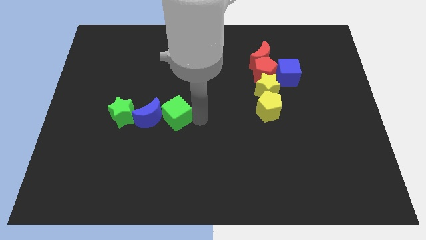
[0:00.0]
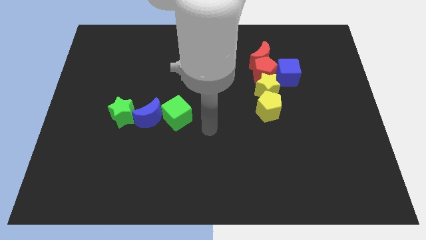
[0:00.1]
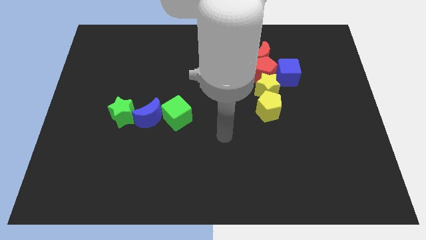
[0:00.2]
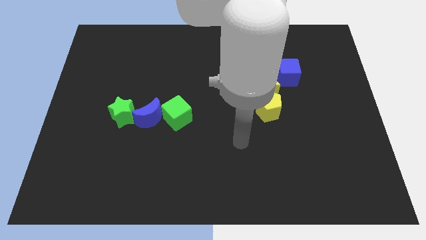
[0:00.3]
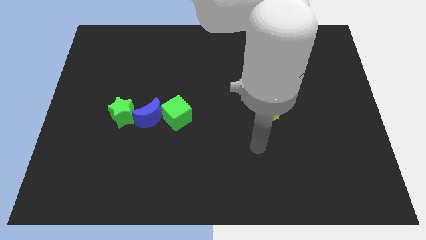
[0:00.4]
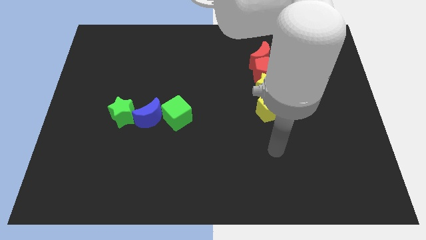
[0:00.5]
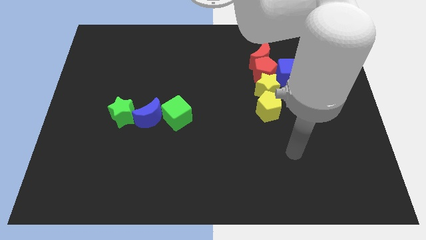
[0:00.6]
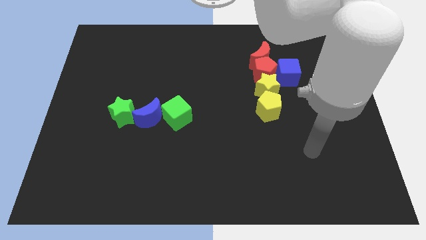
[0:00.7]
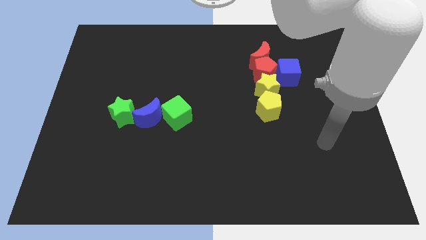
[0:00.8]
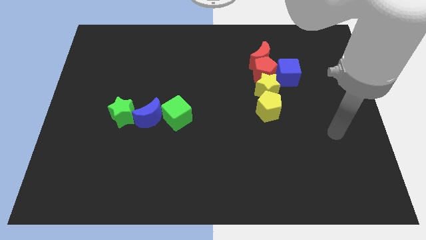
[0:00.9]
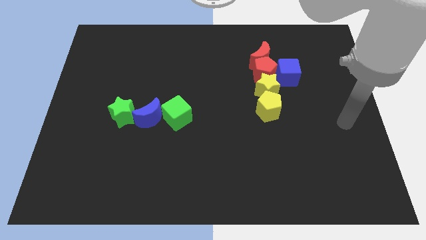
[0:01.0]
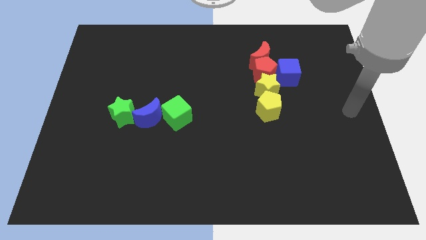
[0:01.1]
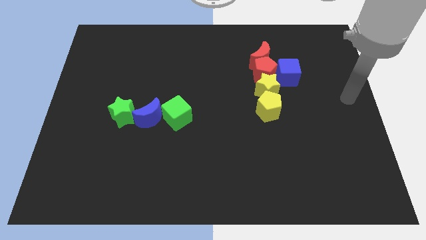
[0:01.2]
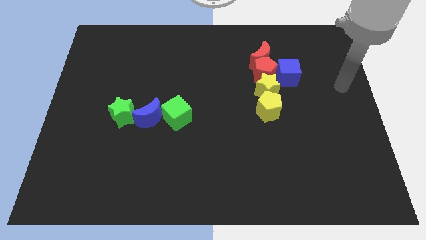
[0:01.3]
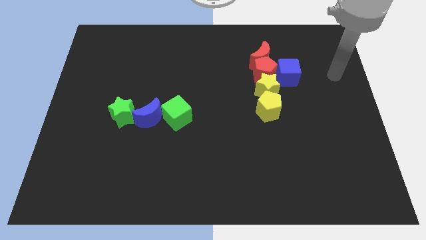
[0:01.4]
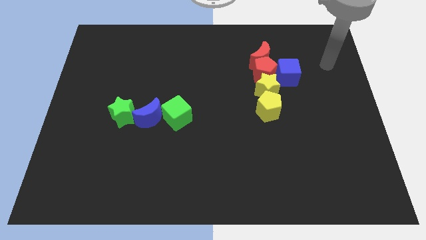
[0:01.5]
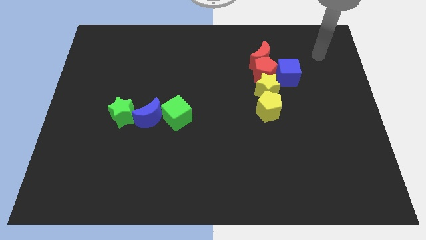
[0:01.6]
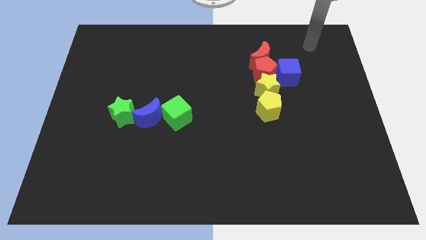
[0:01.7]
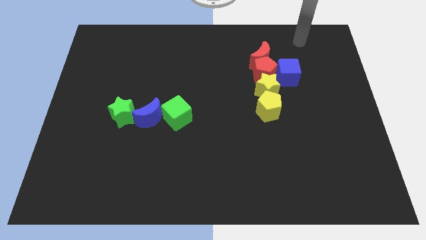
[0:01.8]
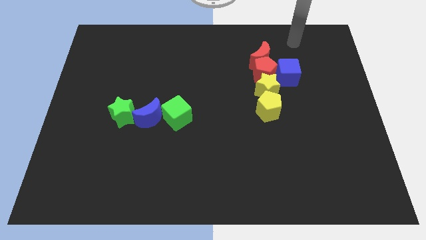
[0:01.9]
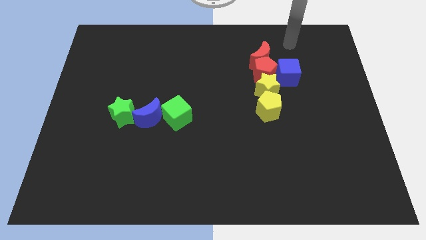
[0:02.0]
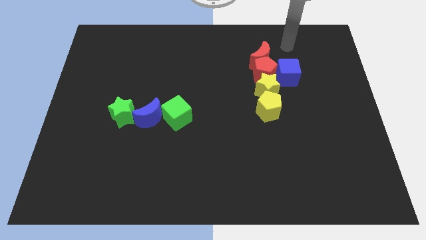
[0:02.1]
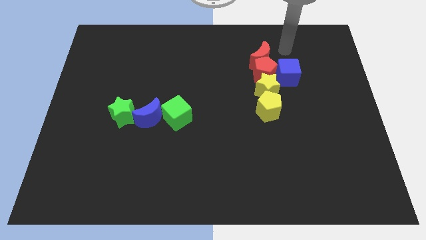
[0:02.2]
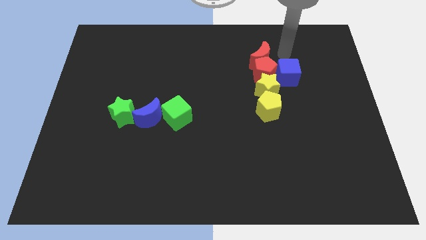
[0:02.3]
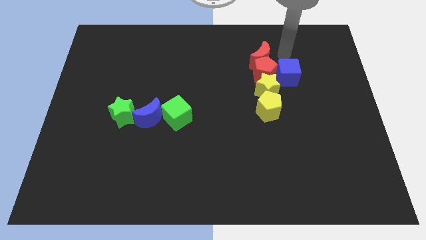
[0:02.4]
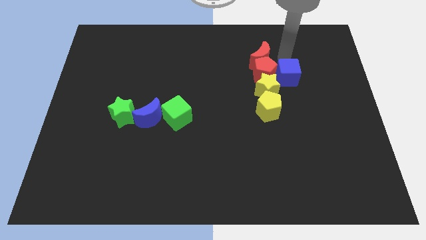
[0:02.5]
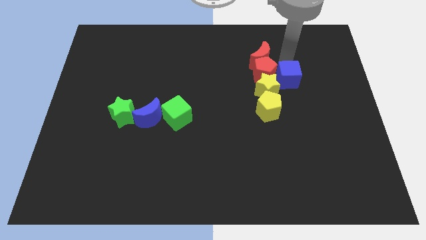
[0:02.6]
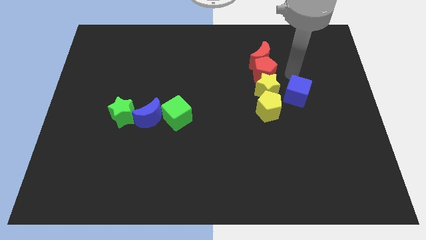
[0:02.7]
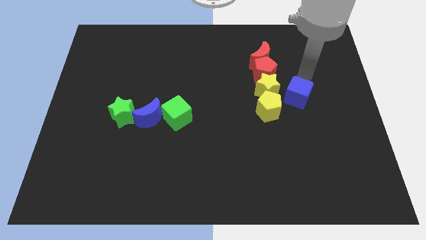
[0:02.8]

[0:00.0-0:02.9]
separate the blue cube from the red pentagon

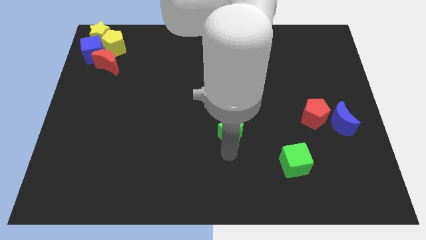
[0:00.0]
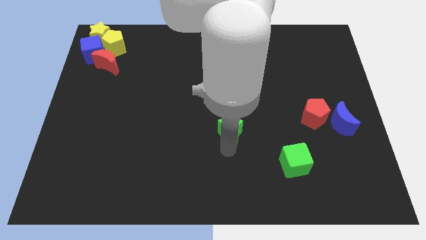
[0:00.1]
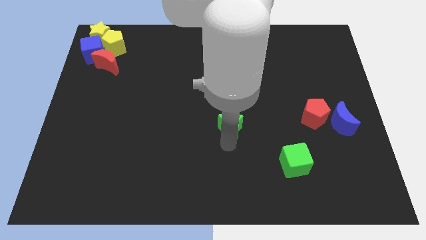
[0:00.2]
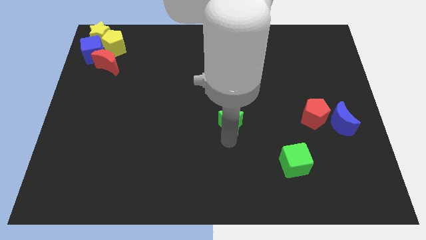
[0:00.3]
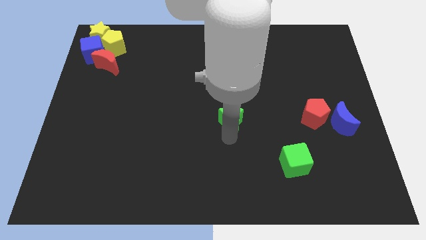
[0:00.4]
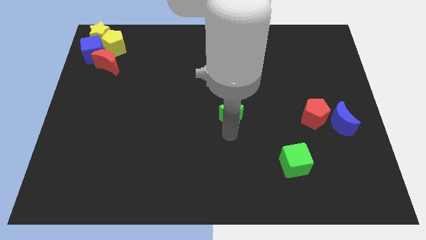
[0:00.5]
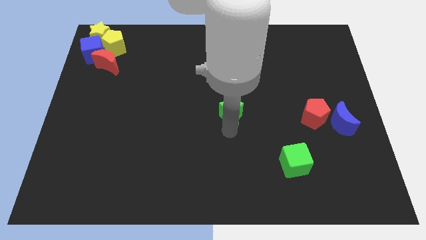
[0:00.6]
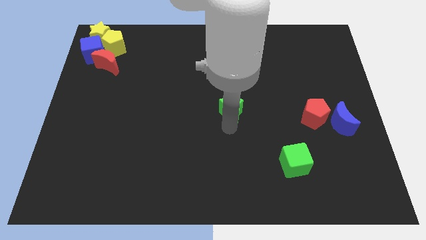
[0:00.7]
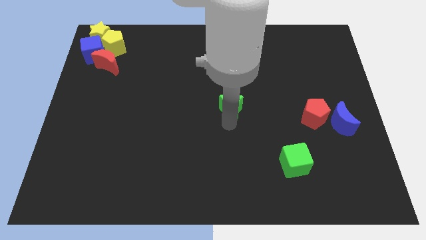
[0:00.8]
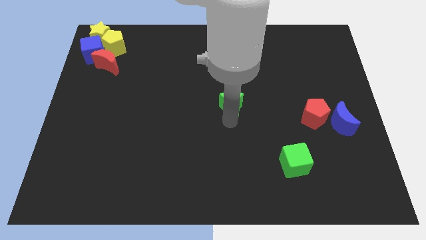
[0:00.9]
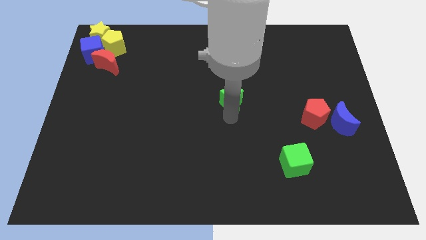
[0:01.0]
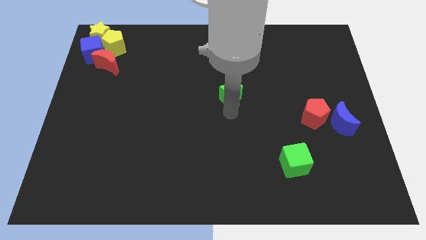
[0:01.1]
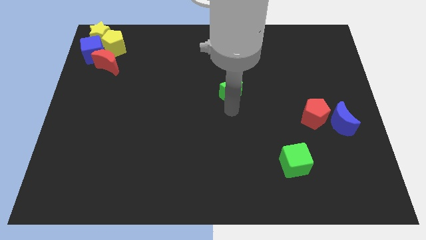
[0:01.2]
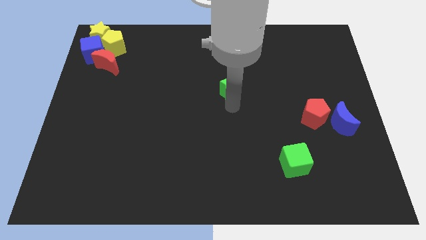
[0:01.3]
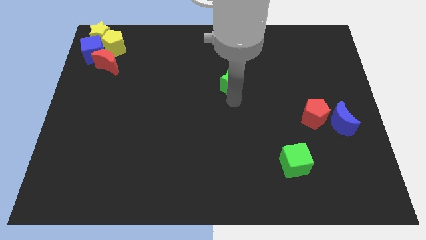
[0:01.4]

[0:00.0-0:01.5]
put the green star at the center of the board

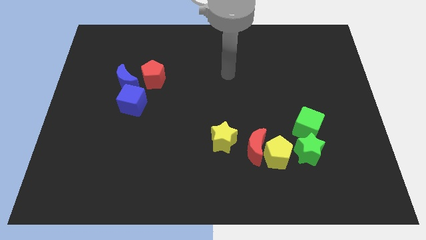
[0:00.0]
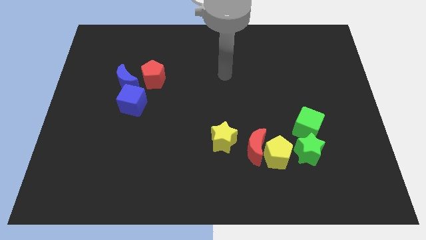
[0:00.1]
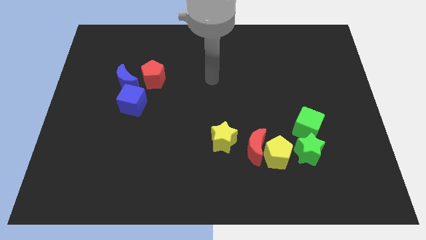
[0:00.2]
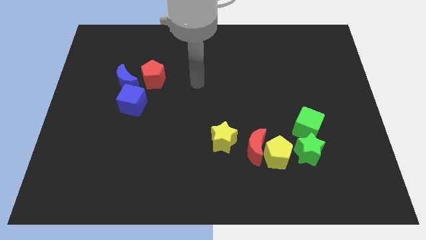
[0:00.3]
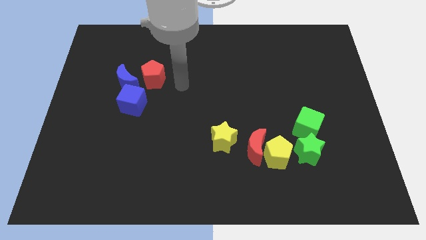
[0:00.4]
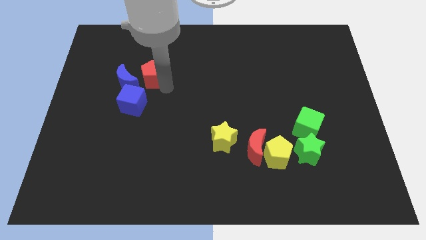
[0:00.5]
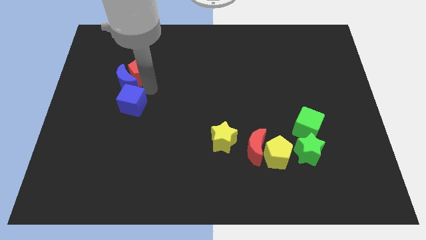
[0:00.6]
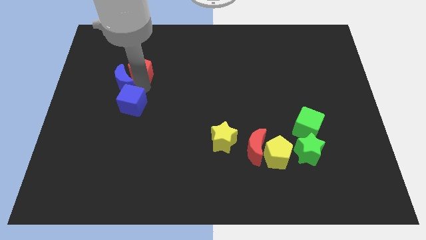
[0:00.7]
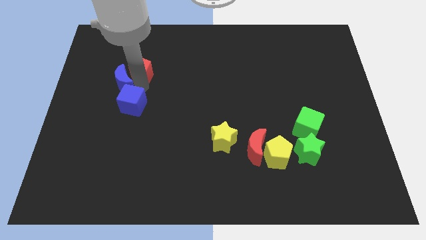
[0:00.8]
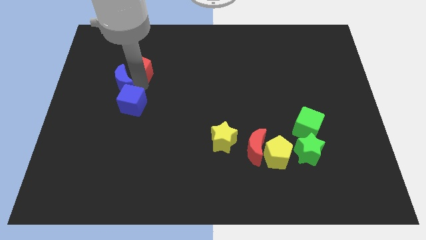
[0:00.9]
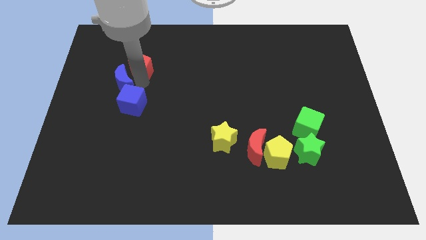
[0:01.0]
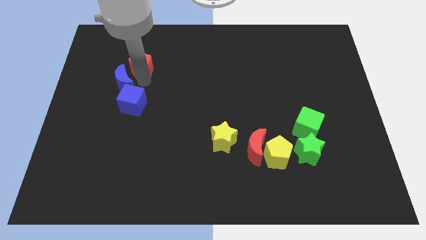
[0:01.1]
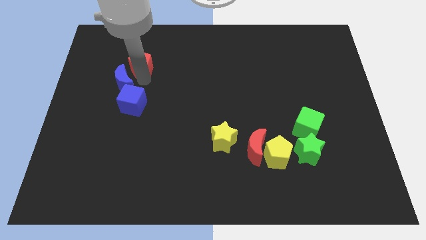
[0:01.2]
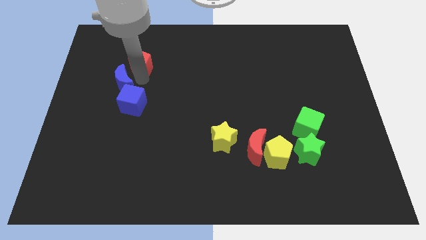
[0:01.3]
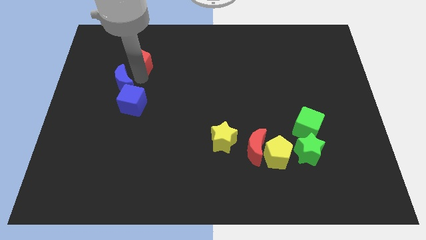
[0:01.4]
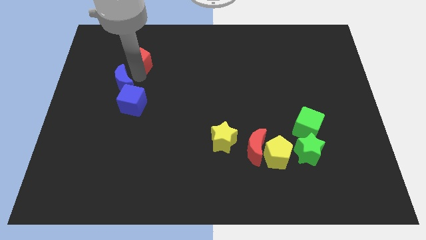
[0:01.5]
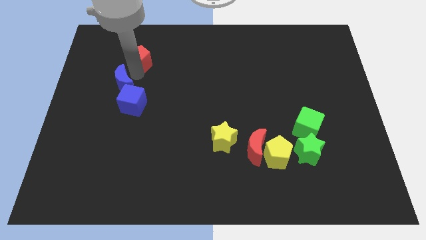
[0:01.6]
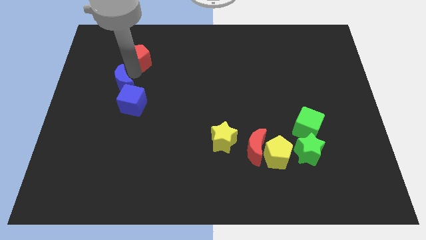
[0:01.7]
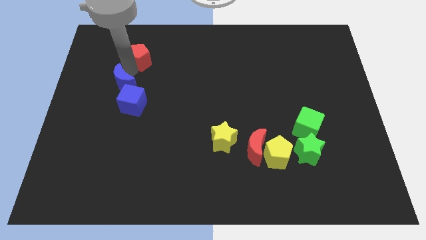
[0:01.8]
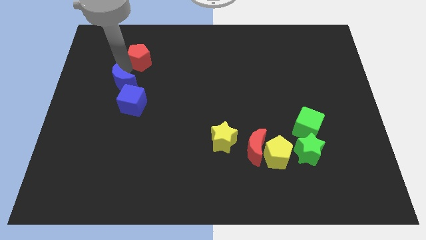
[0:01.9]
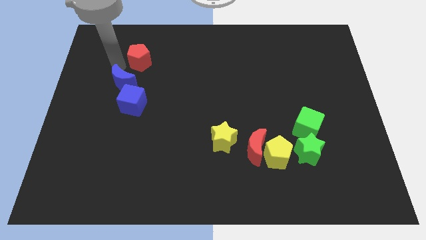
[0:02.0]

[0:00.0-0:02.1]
place the red pentagon diagonally to the blue moon

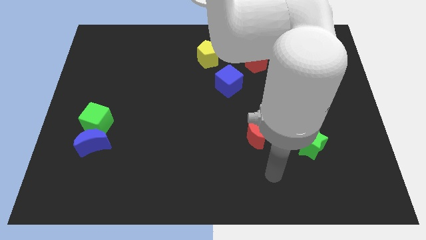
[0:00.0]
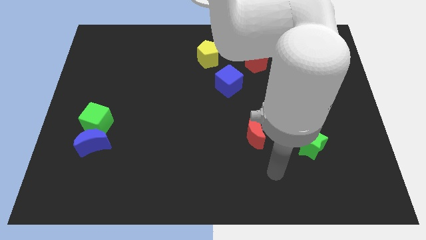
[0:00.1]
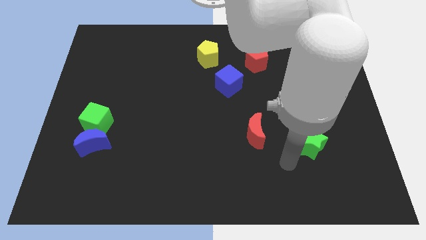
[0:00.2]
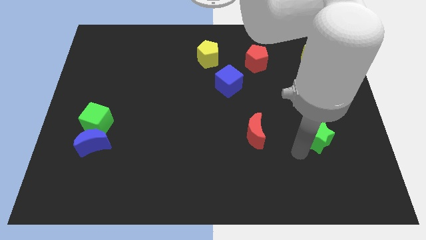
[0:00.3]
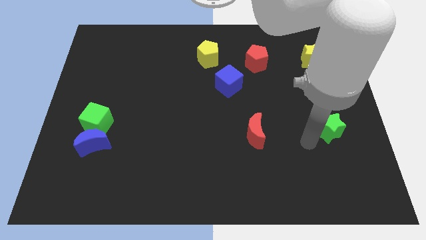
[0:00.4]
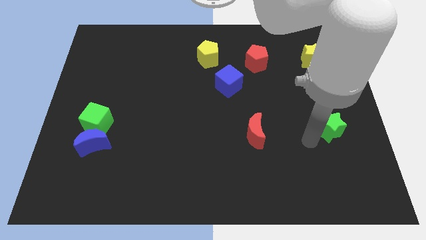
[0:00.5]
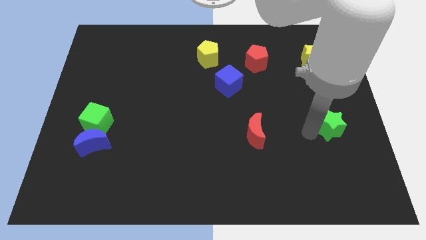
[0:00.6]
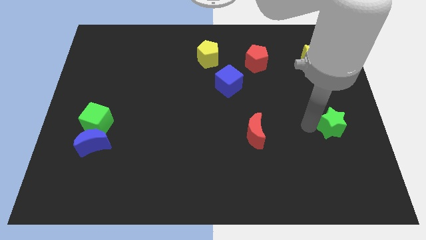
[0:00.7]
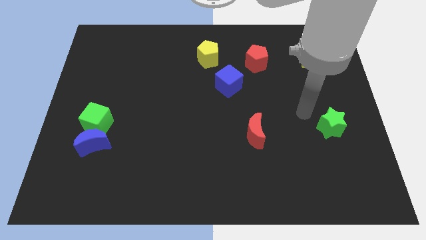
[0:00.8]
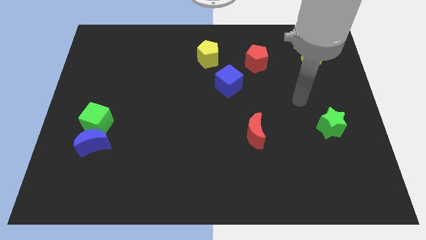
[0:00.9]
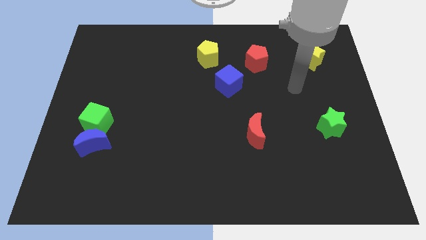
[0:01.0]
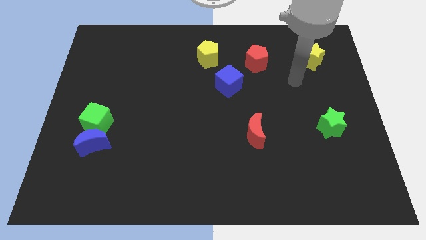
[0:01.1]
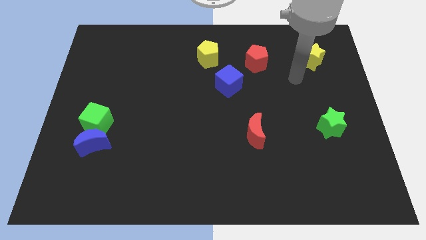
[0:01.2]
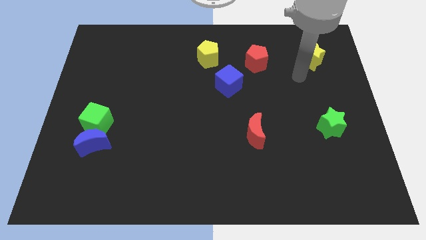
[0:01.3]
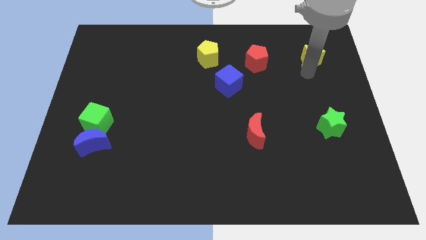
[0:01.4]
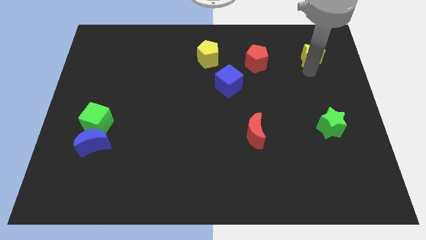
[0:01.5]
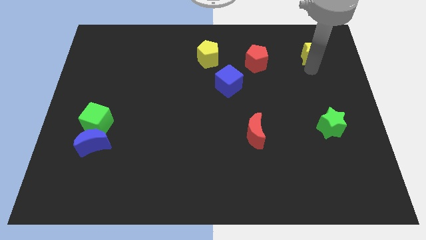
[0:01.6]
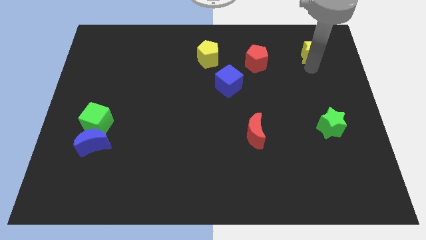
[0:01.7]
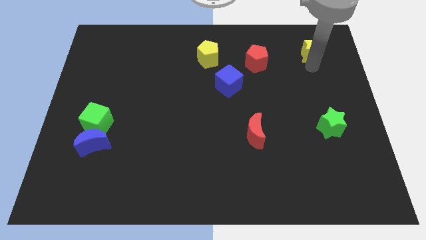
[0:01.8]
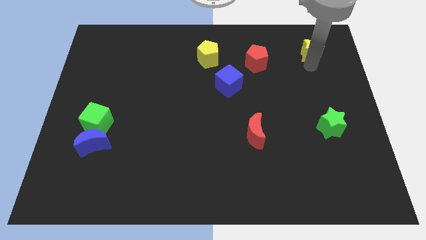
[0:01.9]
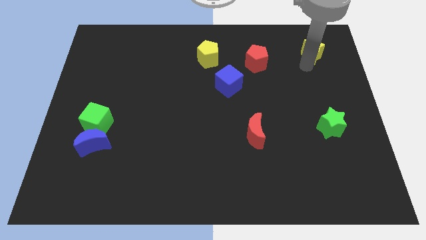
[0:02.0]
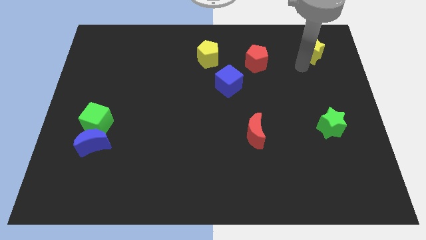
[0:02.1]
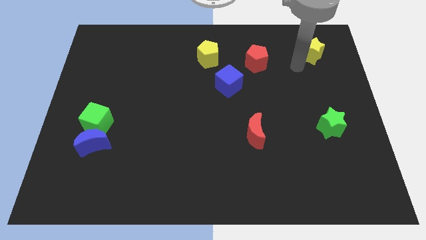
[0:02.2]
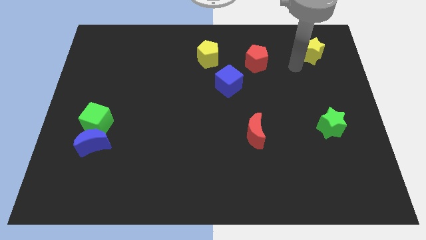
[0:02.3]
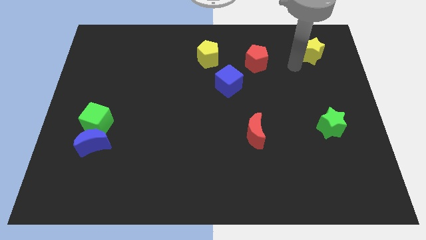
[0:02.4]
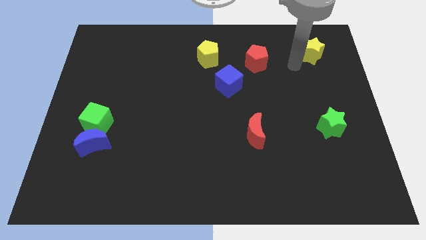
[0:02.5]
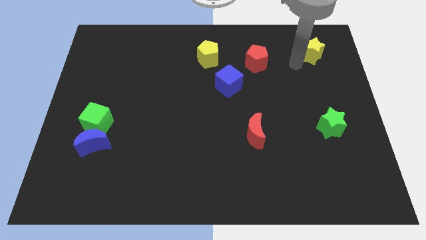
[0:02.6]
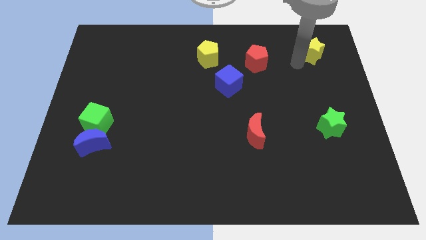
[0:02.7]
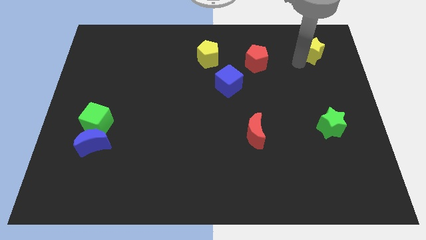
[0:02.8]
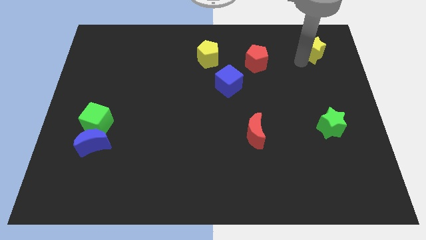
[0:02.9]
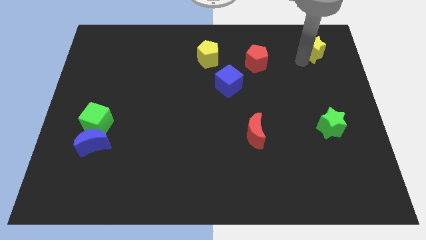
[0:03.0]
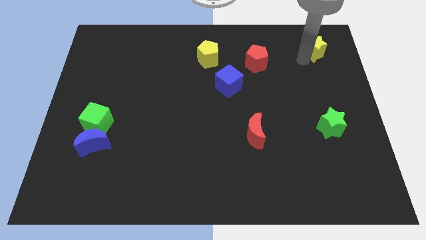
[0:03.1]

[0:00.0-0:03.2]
push the green star horizontally towards the right side of the red moon
